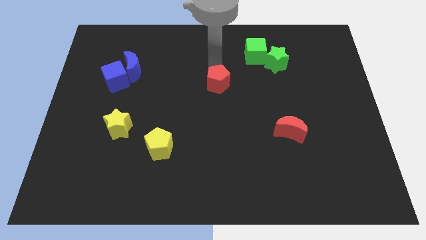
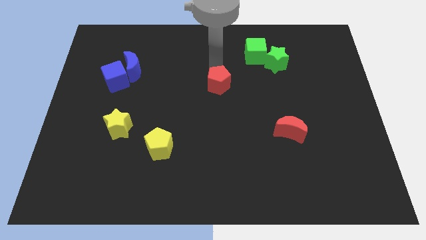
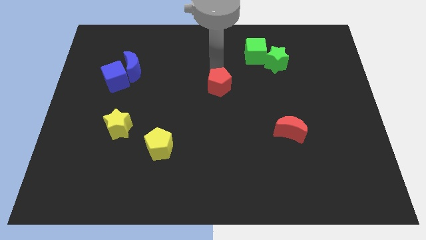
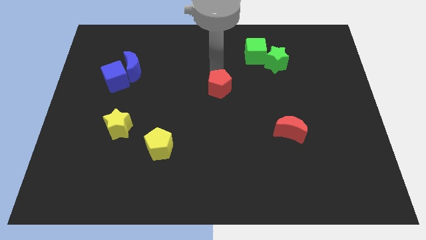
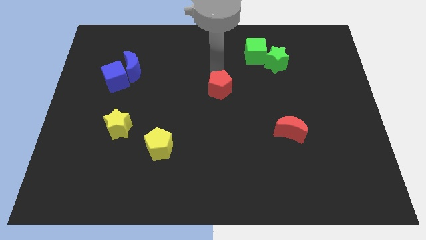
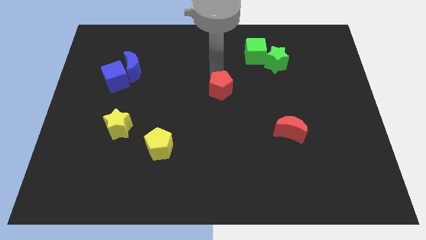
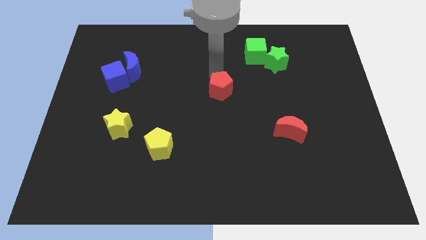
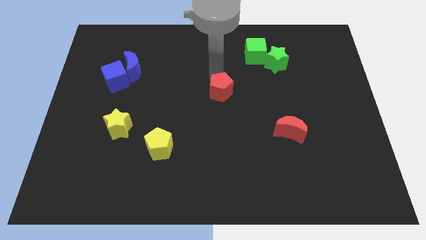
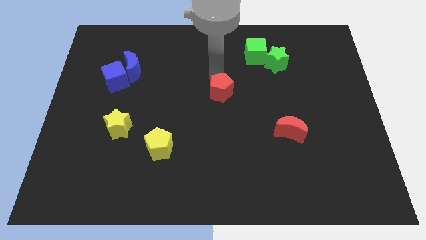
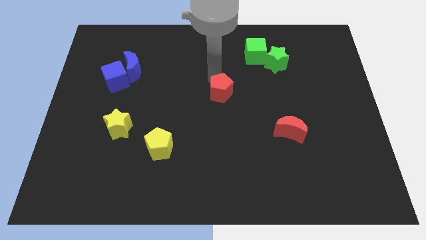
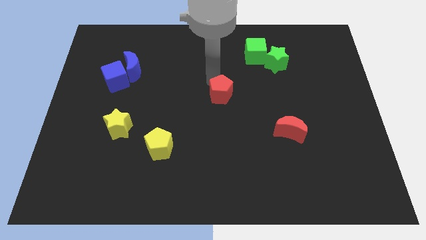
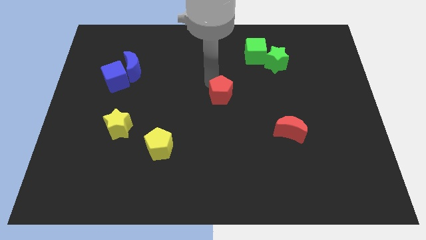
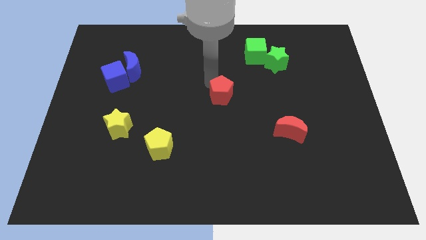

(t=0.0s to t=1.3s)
move red pentagon in center of the board

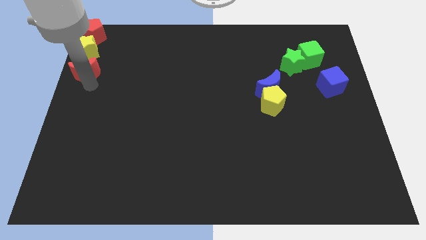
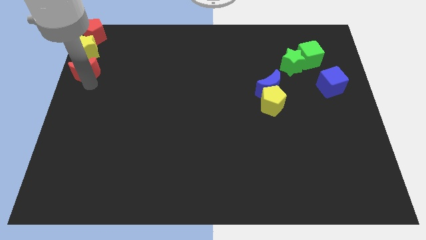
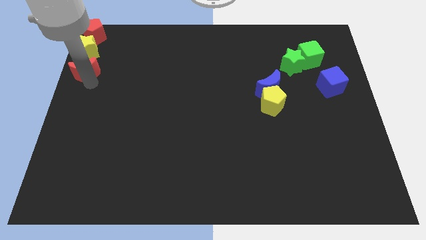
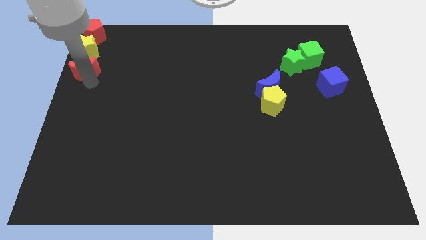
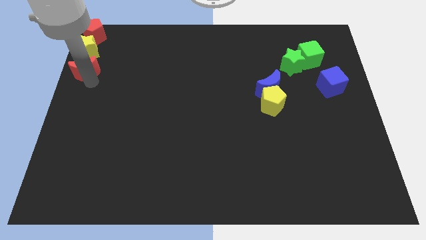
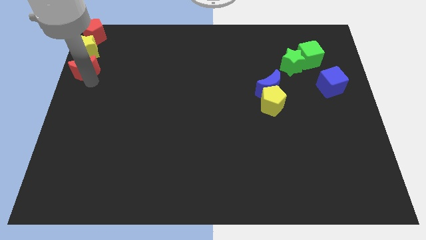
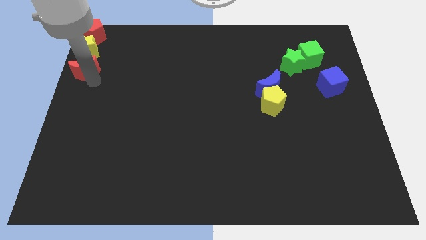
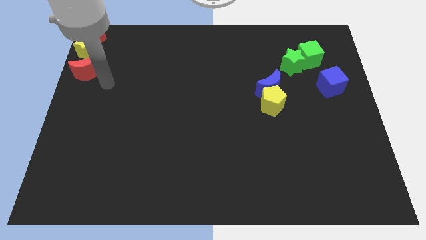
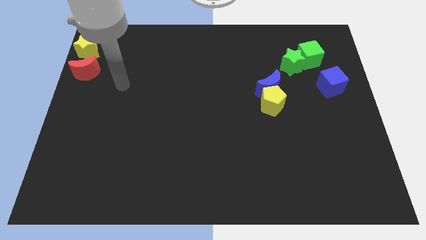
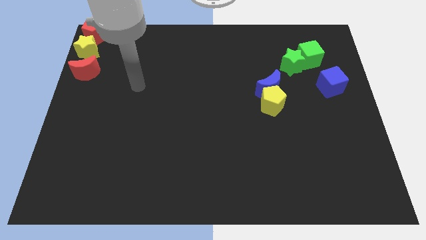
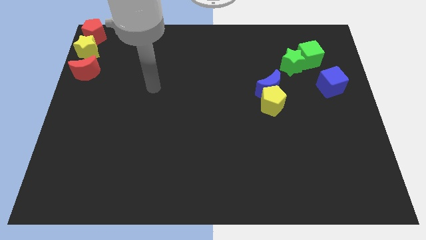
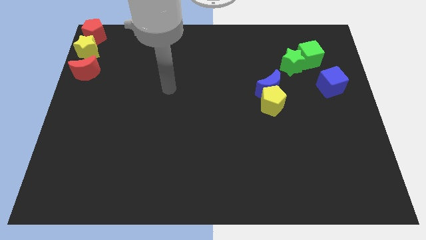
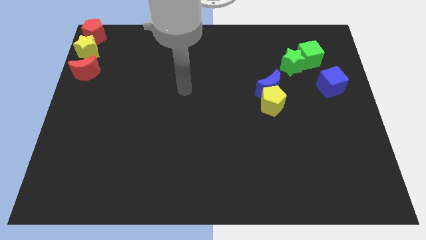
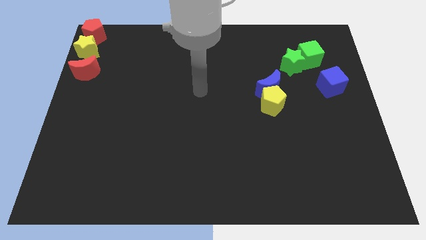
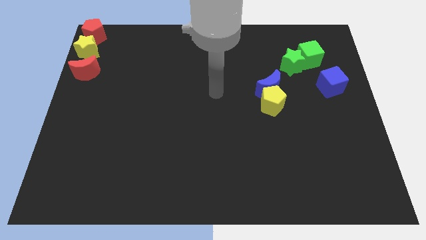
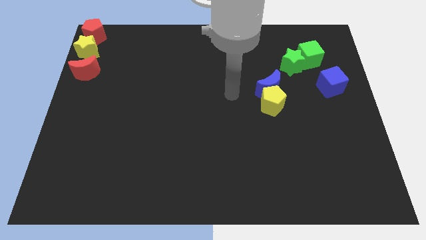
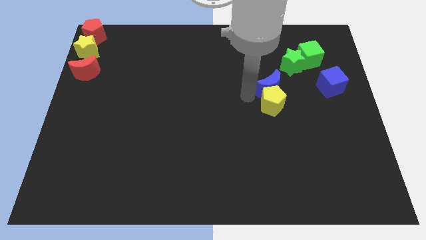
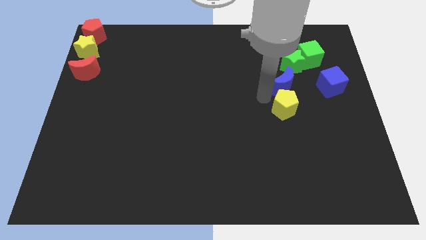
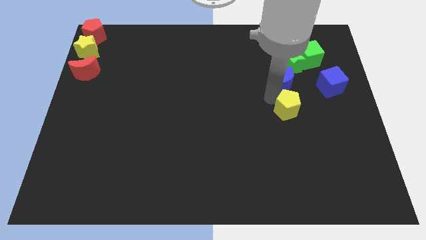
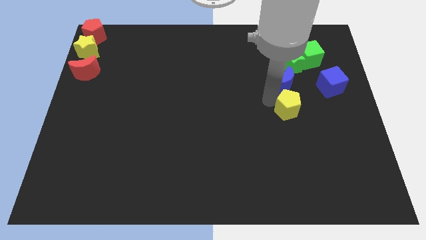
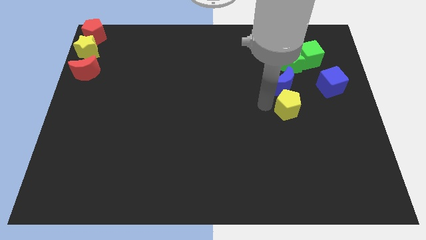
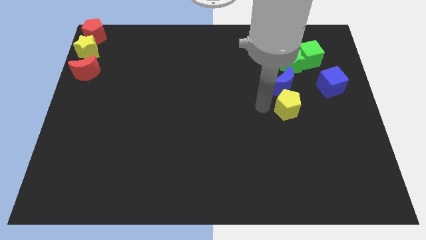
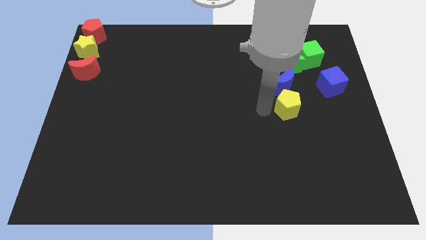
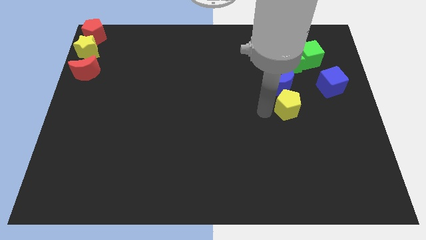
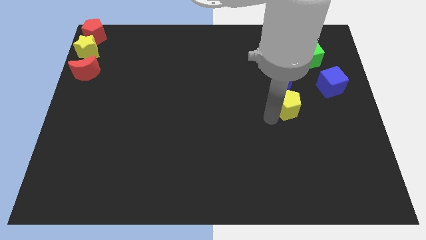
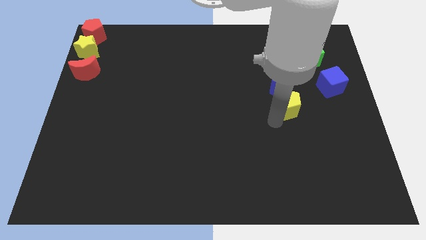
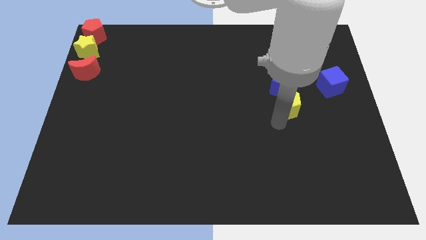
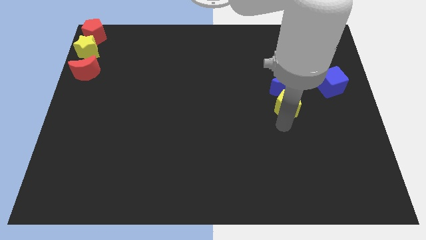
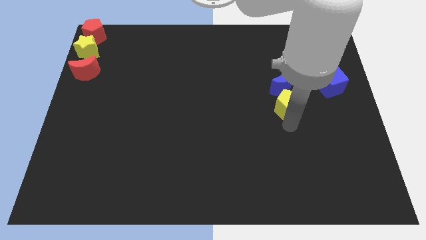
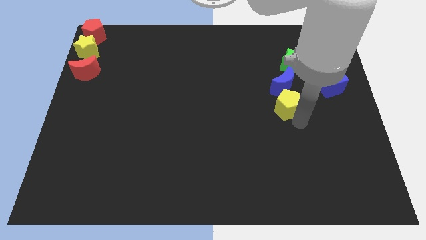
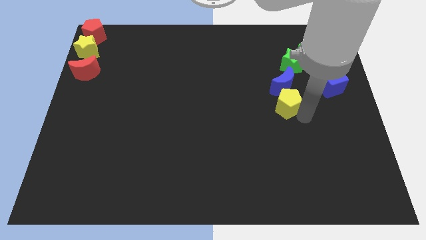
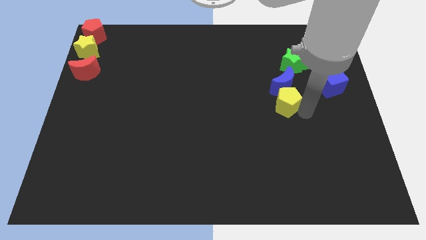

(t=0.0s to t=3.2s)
move the arm around the yellow pentagon

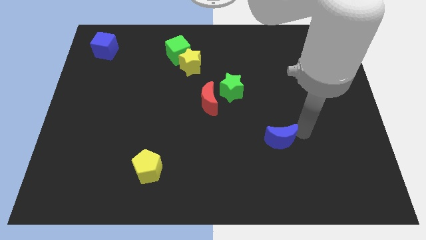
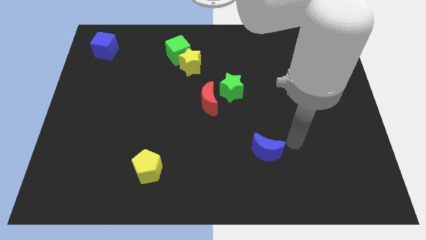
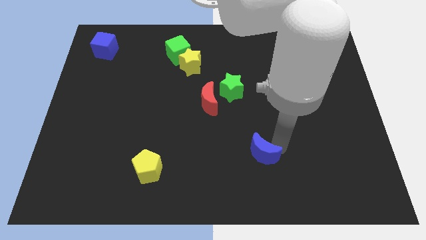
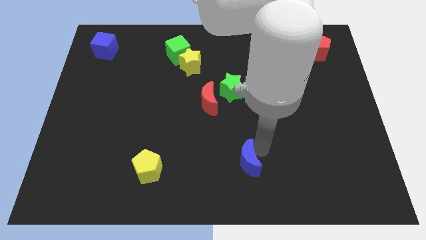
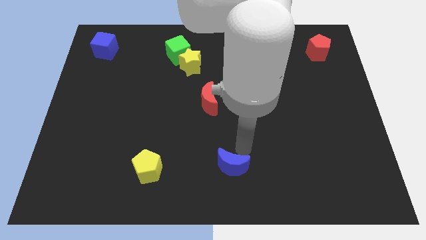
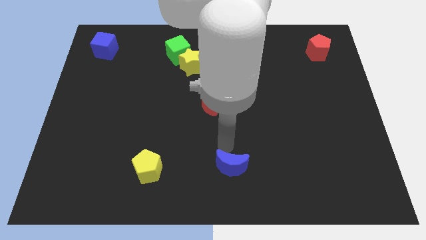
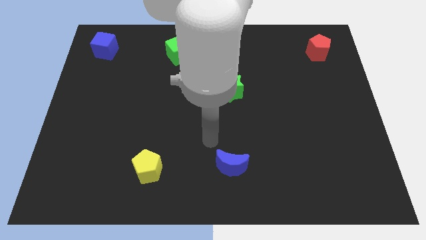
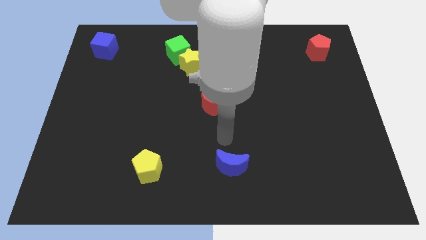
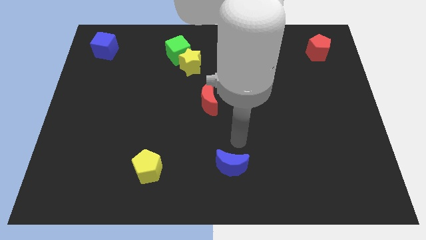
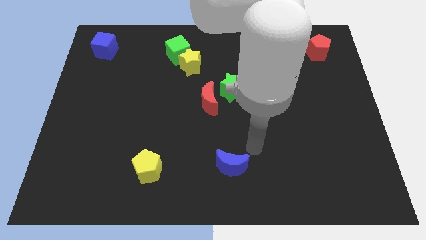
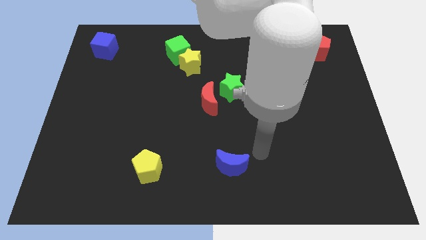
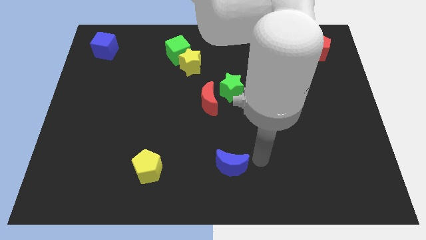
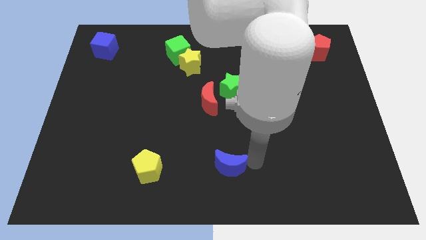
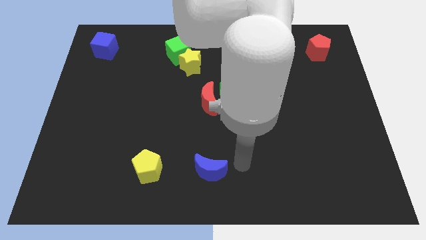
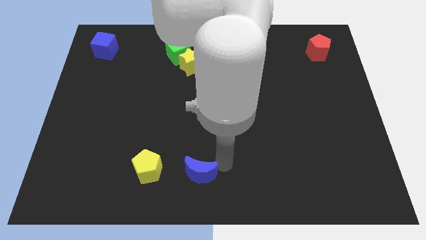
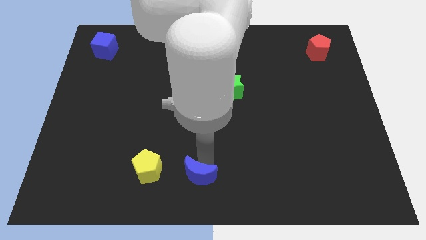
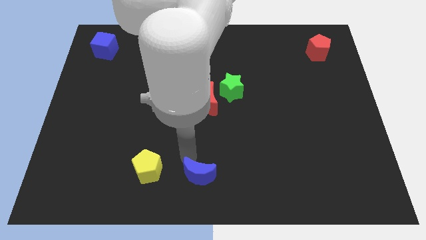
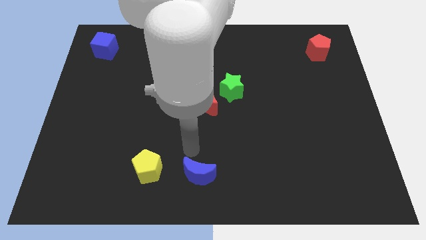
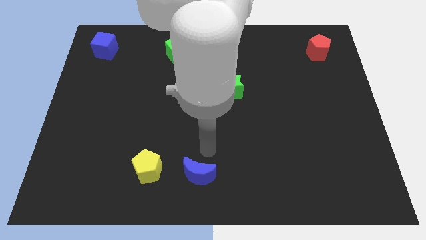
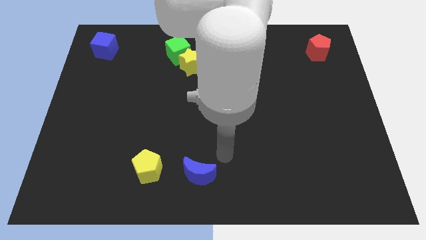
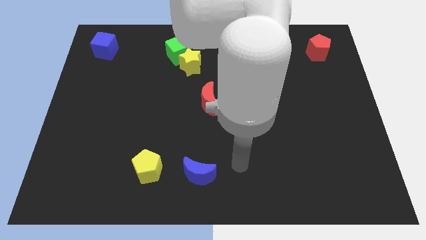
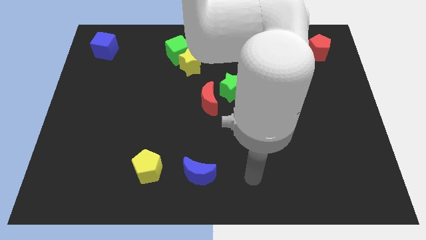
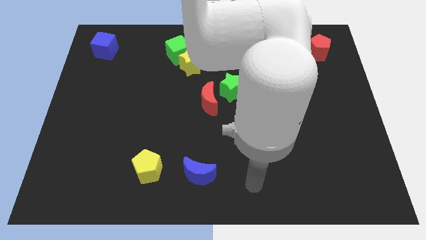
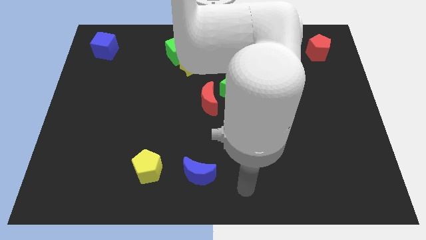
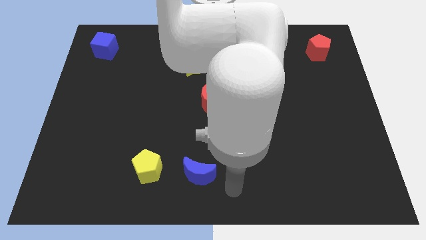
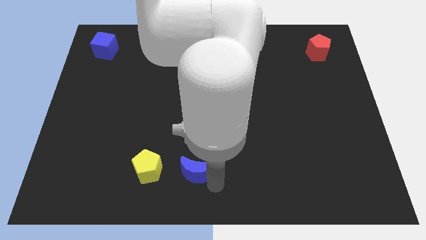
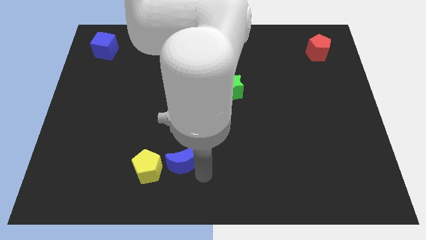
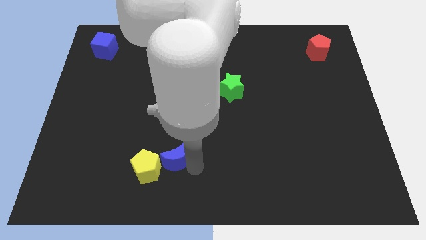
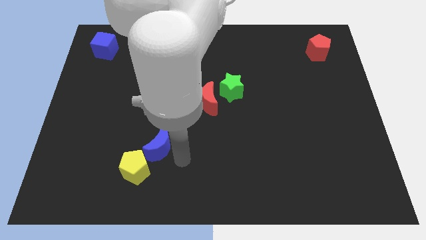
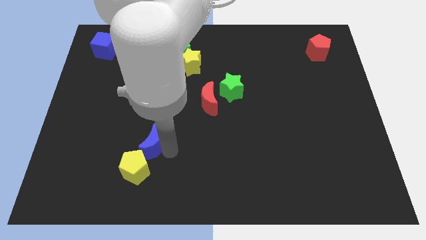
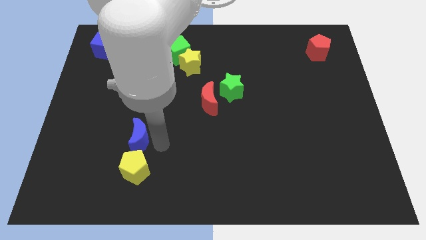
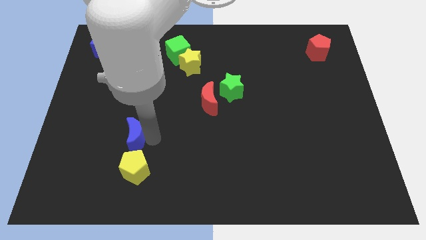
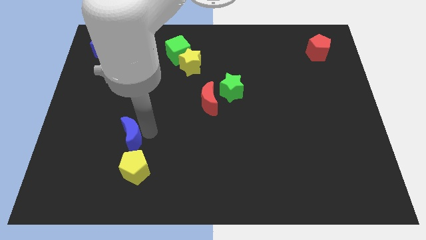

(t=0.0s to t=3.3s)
move the blue crescent to the top of the yellow pentagon

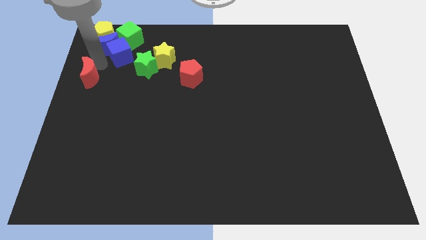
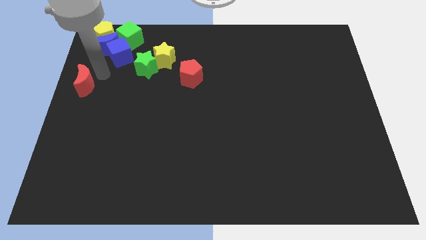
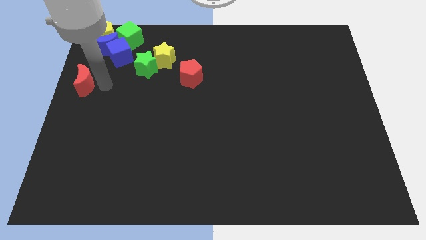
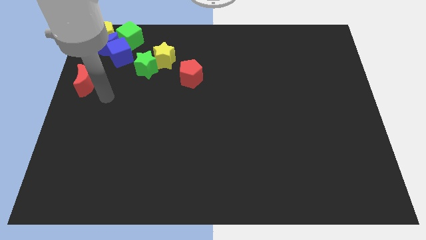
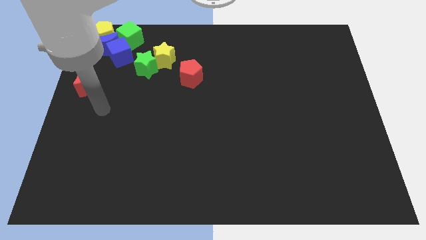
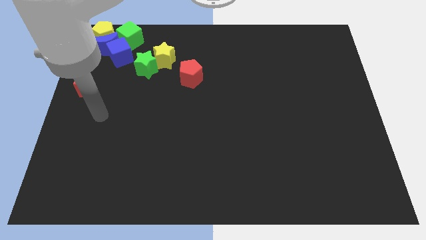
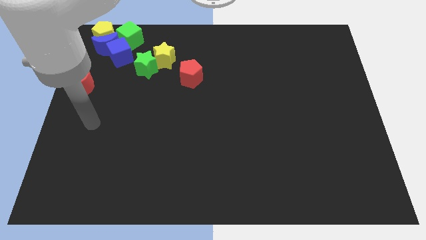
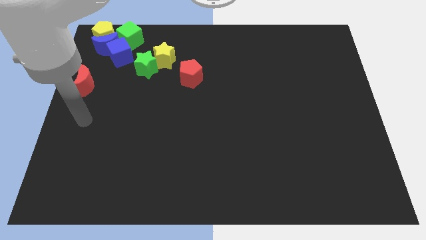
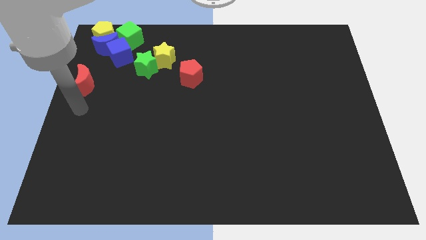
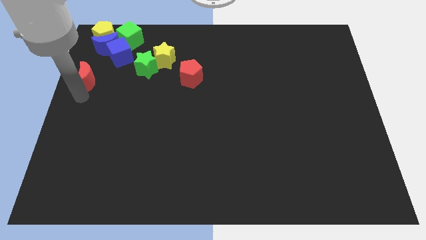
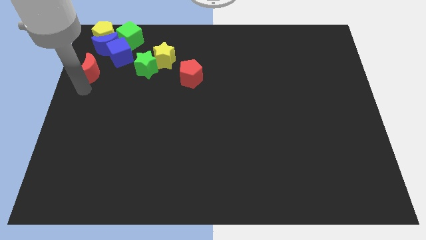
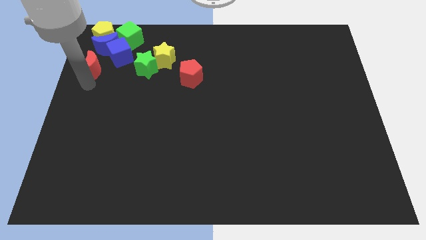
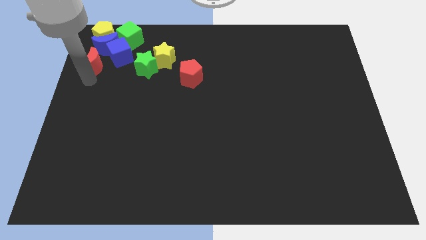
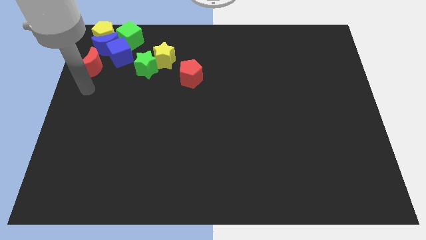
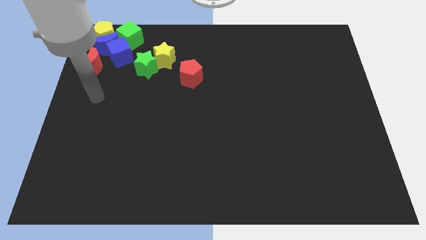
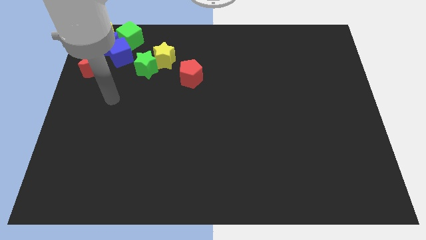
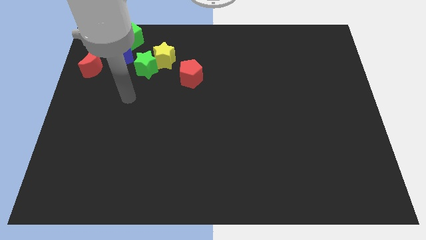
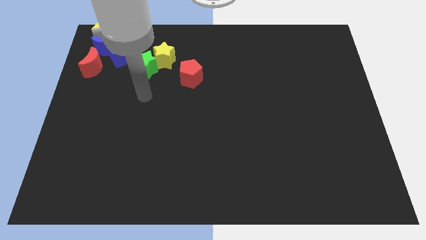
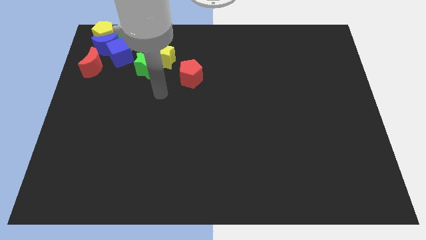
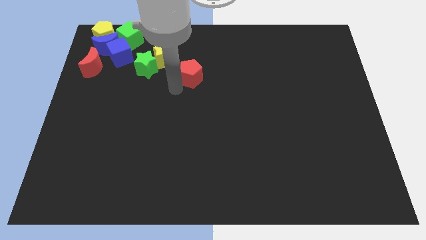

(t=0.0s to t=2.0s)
put the red moon below the blue moon
